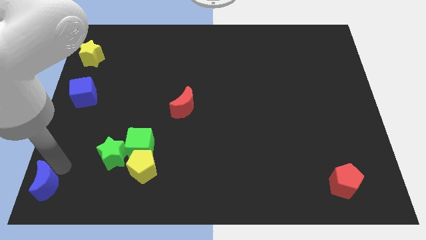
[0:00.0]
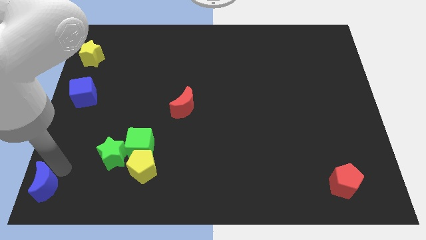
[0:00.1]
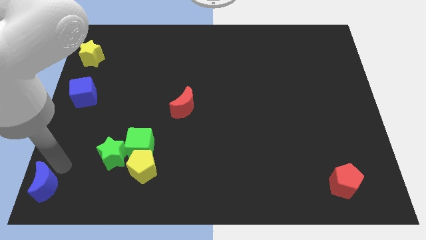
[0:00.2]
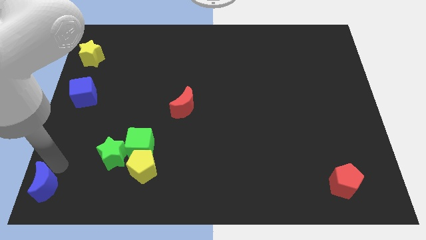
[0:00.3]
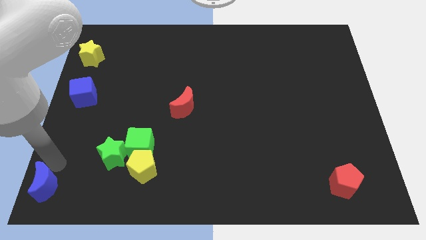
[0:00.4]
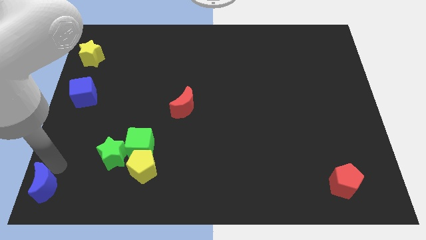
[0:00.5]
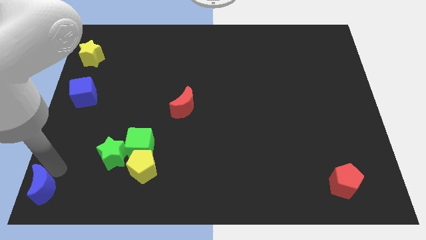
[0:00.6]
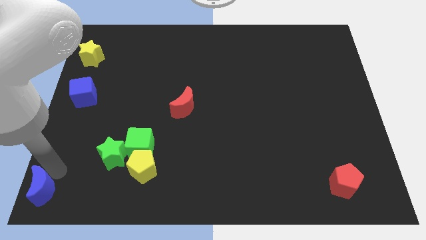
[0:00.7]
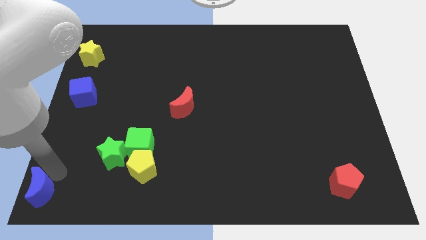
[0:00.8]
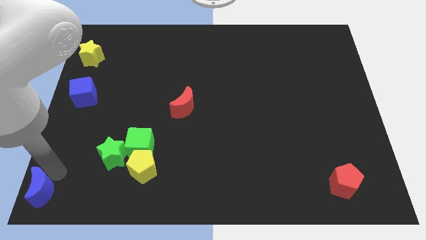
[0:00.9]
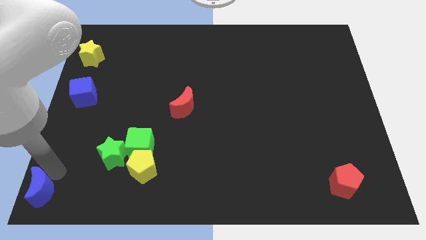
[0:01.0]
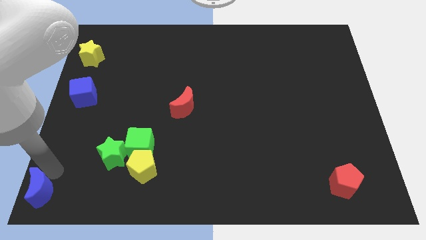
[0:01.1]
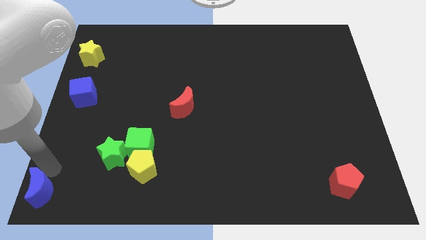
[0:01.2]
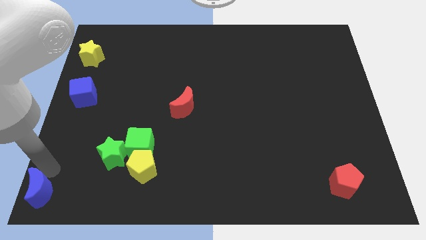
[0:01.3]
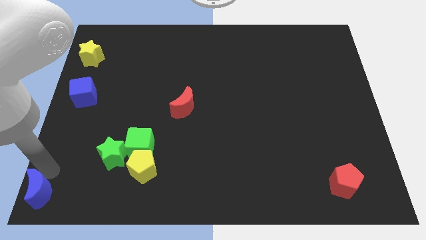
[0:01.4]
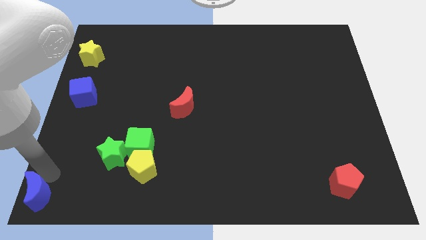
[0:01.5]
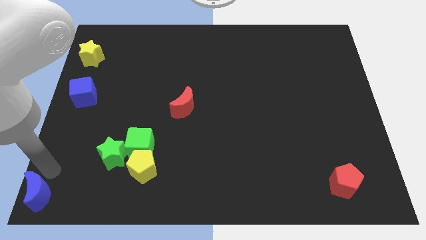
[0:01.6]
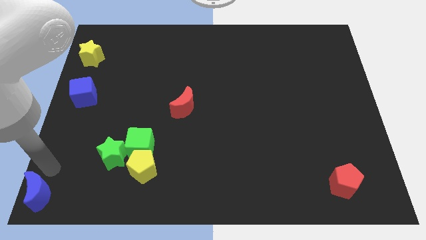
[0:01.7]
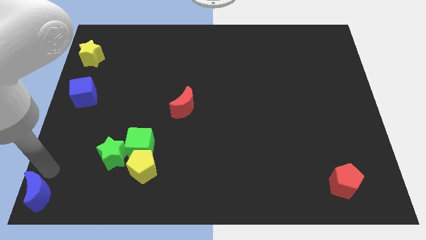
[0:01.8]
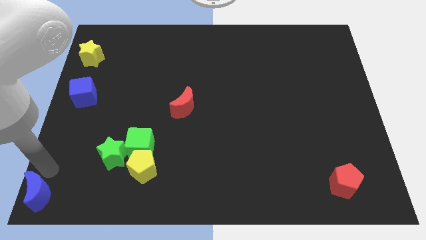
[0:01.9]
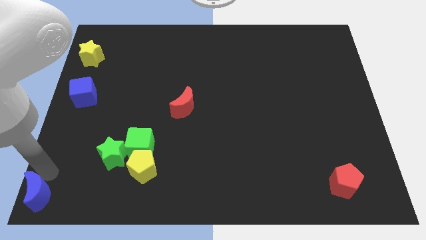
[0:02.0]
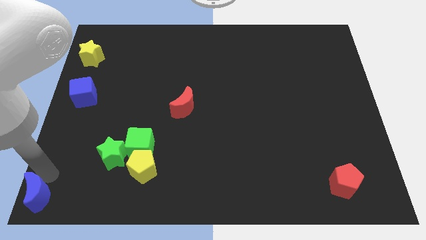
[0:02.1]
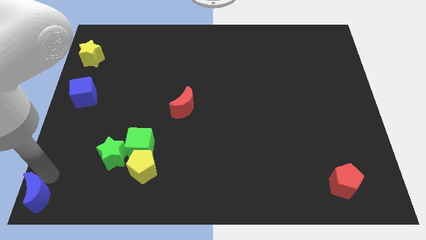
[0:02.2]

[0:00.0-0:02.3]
place the blue crescent at the bottom left corner of the board

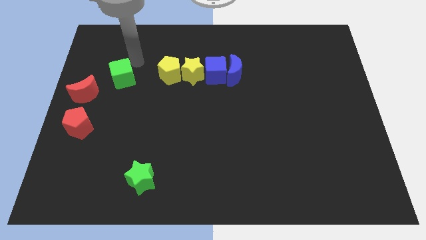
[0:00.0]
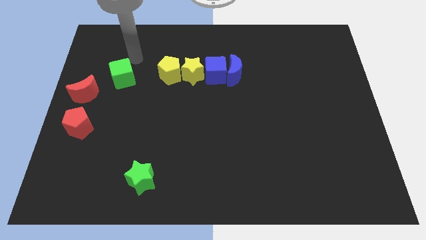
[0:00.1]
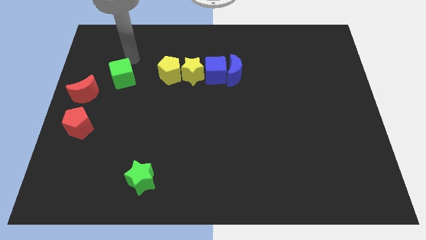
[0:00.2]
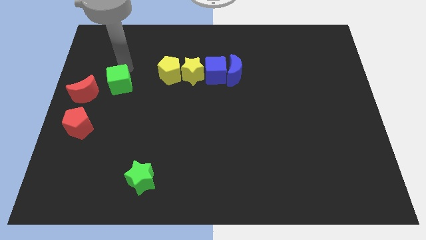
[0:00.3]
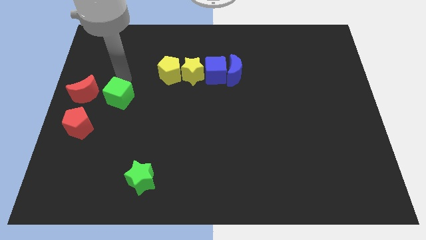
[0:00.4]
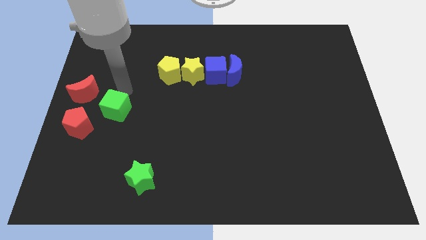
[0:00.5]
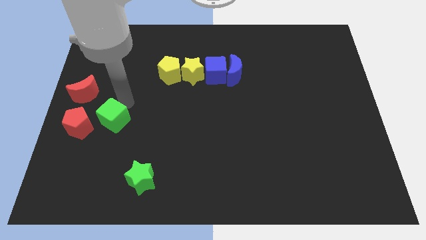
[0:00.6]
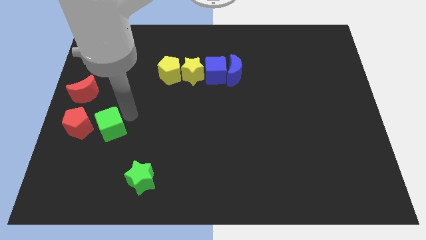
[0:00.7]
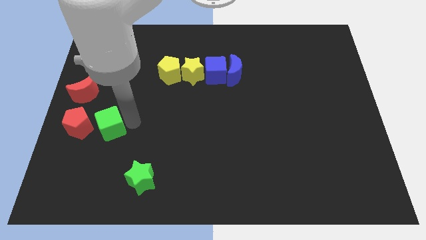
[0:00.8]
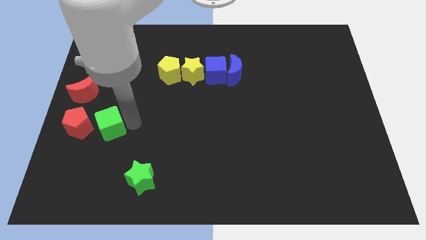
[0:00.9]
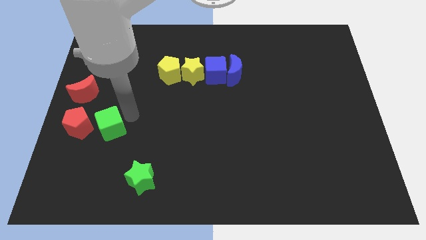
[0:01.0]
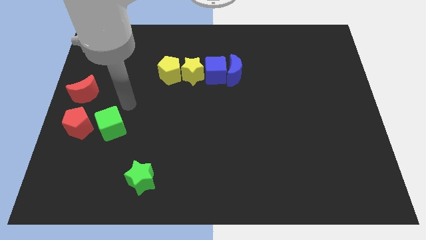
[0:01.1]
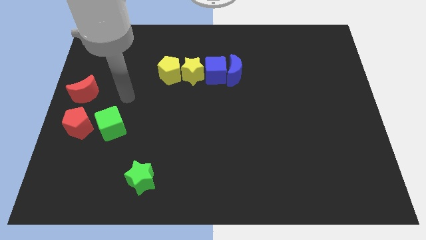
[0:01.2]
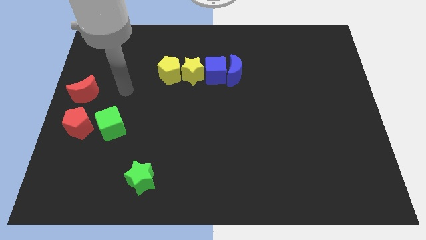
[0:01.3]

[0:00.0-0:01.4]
push the green cube slightly towards down

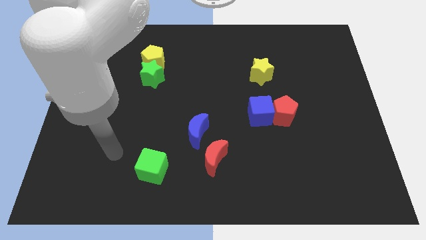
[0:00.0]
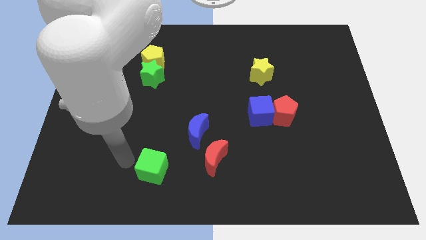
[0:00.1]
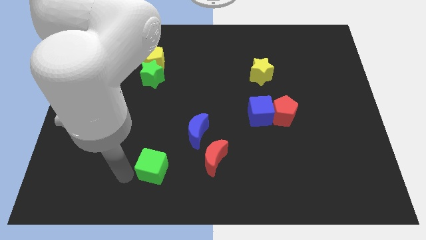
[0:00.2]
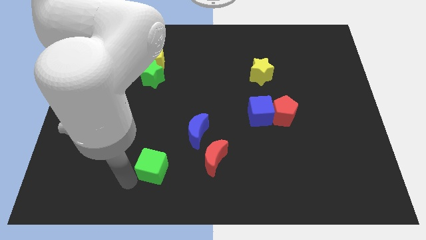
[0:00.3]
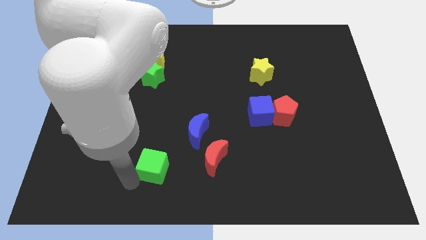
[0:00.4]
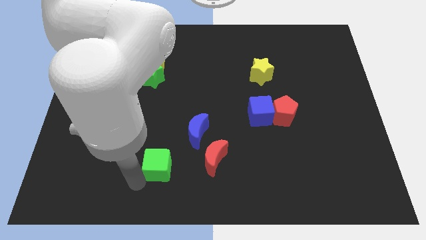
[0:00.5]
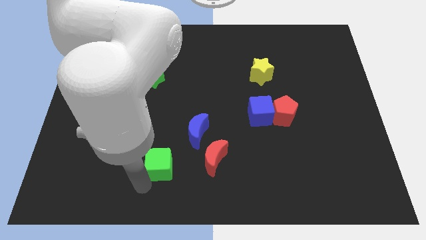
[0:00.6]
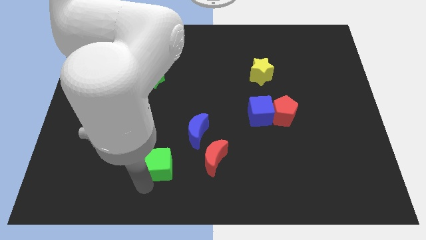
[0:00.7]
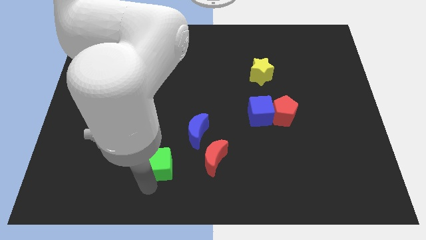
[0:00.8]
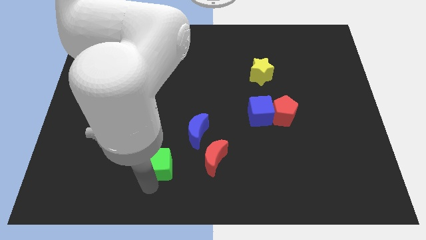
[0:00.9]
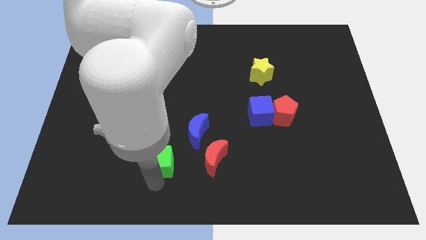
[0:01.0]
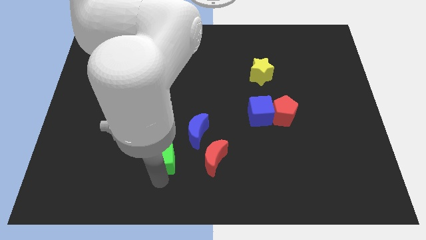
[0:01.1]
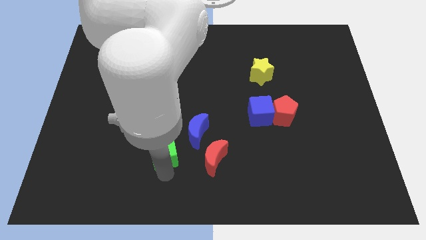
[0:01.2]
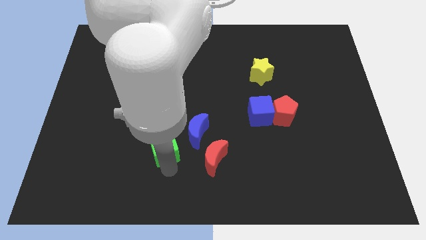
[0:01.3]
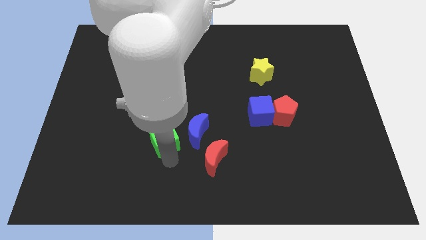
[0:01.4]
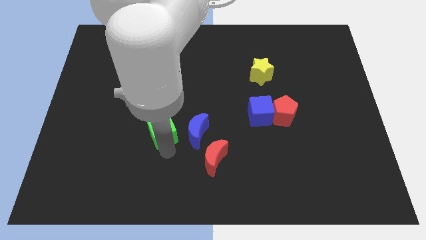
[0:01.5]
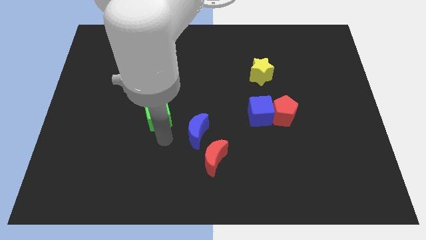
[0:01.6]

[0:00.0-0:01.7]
slide the green cube parallel to blue moon

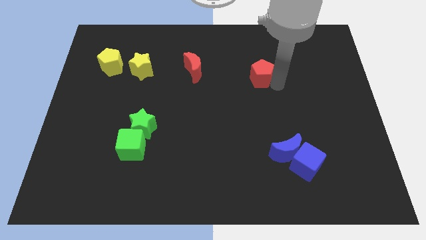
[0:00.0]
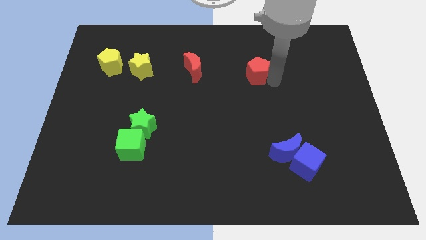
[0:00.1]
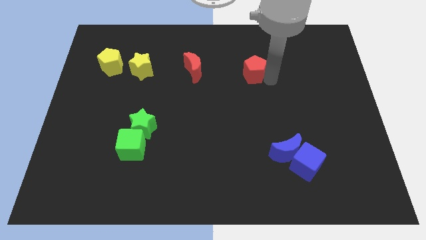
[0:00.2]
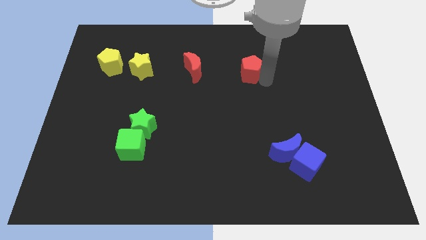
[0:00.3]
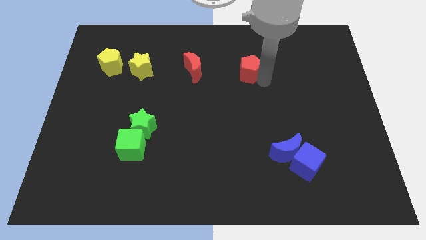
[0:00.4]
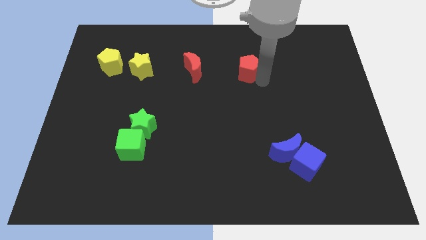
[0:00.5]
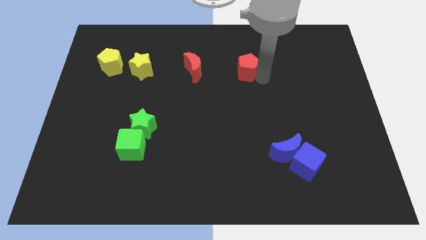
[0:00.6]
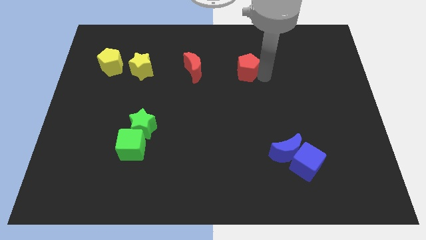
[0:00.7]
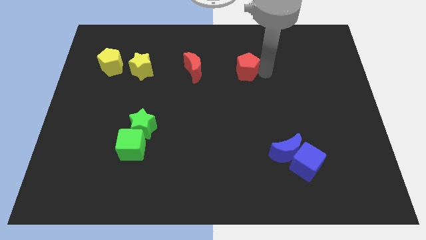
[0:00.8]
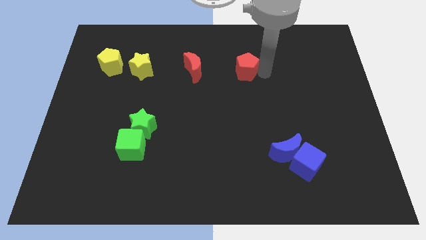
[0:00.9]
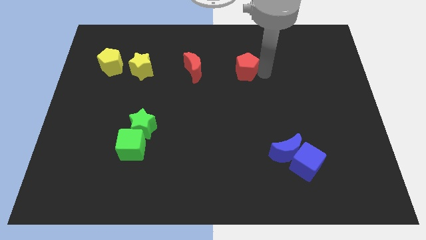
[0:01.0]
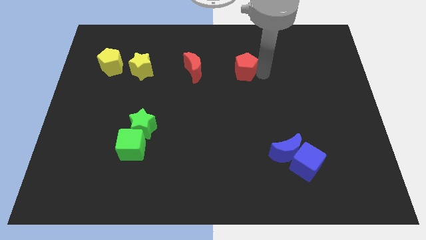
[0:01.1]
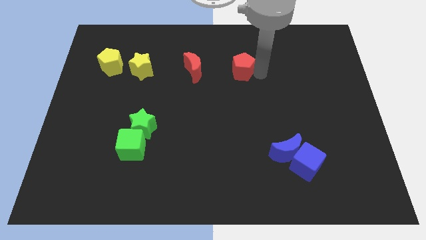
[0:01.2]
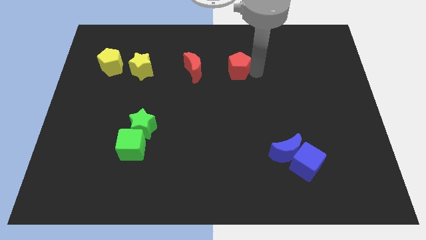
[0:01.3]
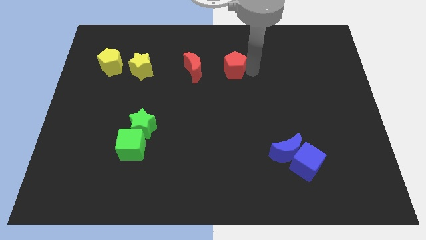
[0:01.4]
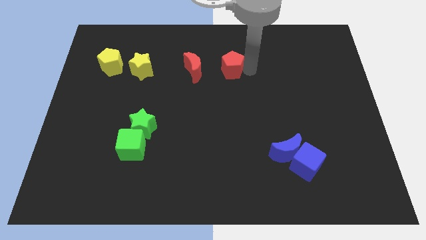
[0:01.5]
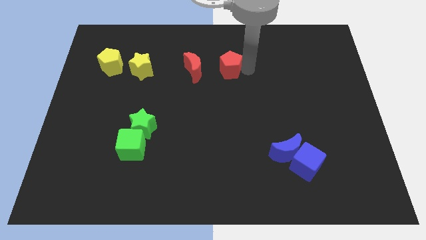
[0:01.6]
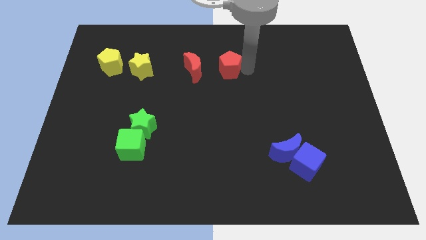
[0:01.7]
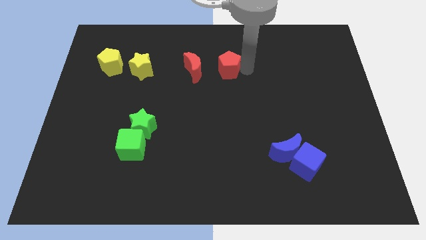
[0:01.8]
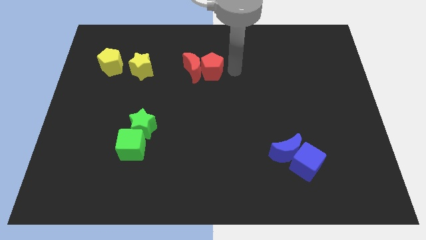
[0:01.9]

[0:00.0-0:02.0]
place red pentagon near to the red moon

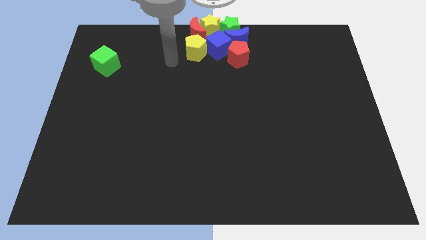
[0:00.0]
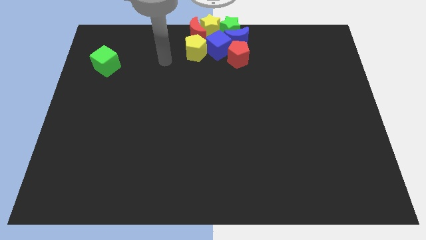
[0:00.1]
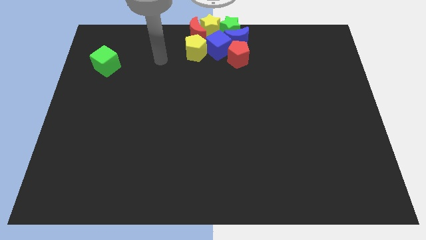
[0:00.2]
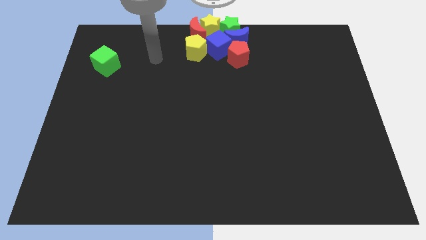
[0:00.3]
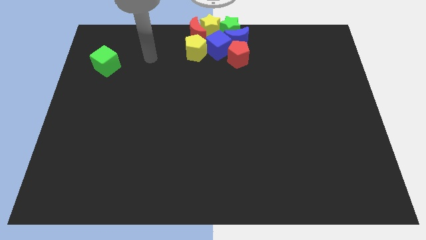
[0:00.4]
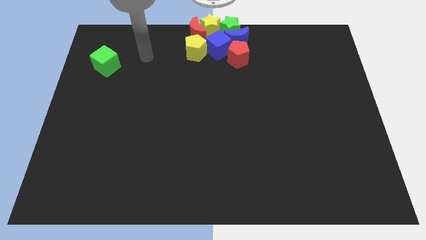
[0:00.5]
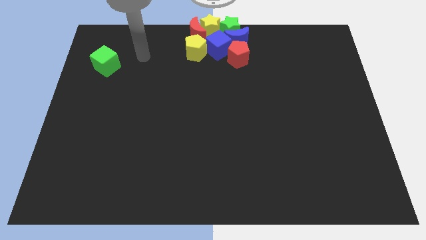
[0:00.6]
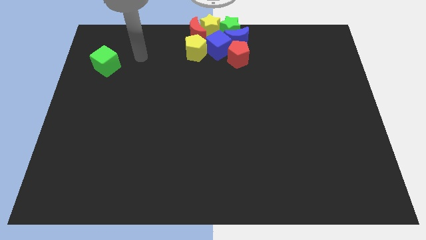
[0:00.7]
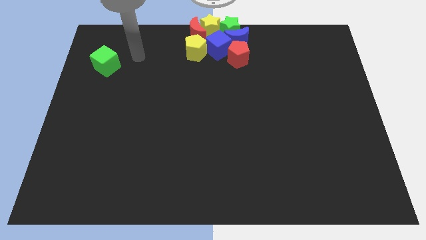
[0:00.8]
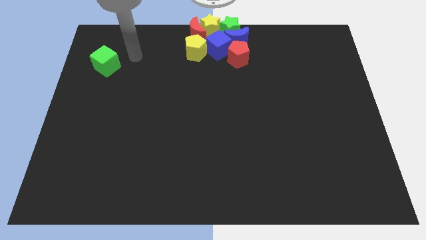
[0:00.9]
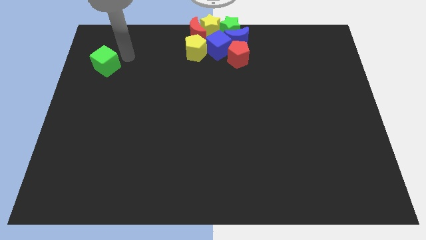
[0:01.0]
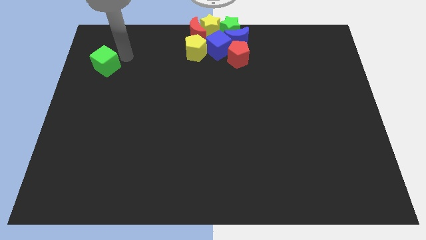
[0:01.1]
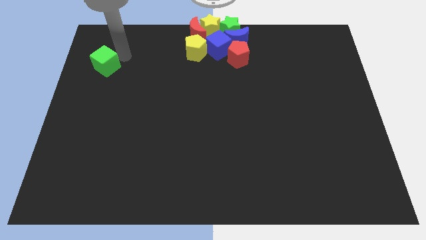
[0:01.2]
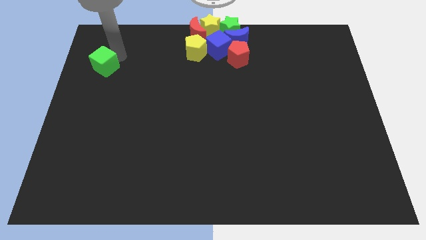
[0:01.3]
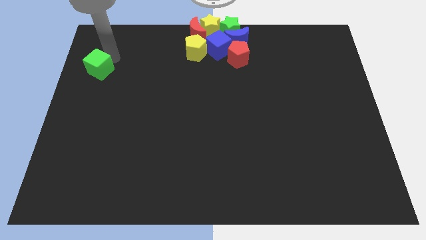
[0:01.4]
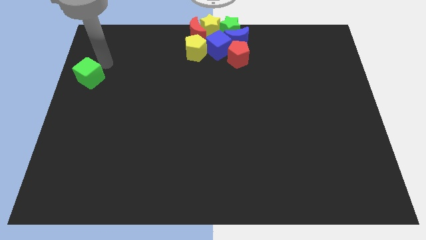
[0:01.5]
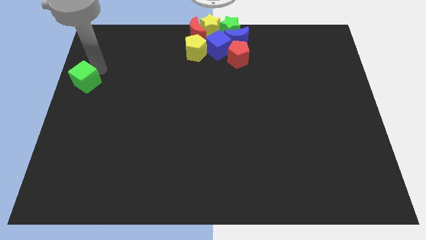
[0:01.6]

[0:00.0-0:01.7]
push the green cube slightly to the center left side of the board
